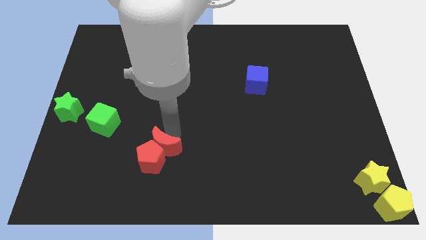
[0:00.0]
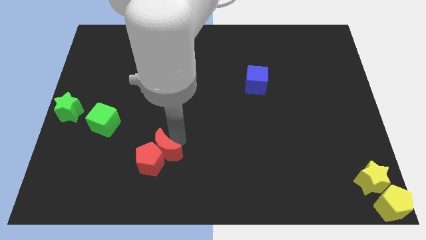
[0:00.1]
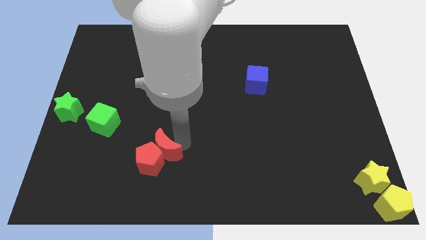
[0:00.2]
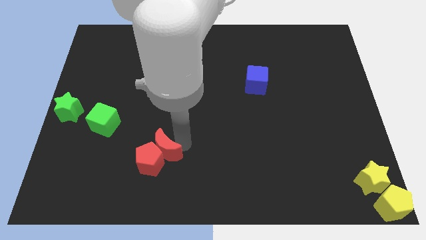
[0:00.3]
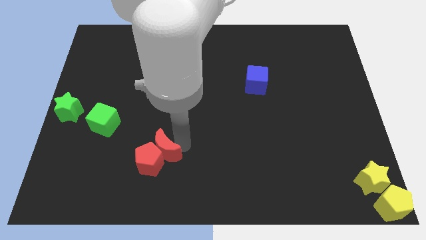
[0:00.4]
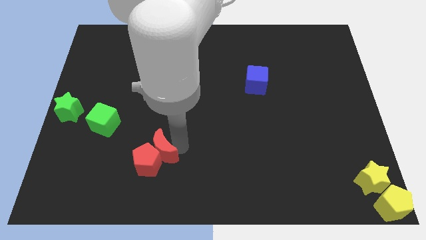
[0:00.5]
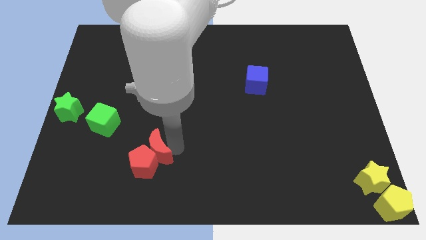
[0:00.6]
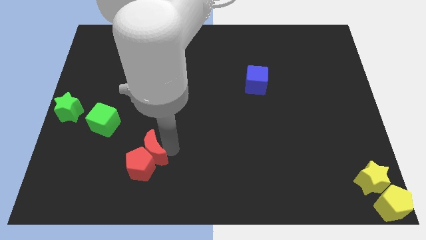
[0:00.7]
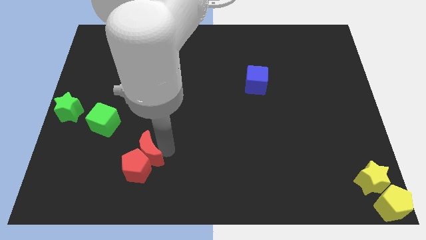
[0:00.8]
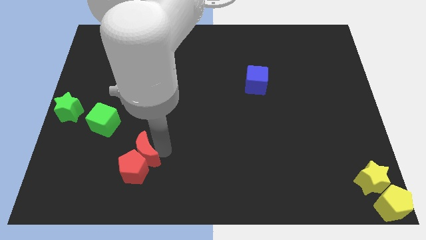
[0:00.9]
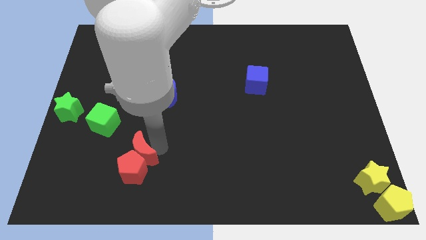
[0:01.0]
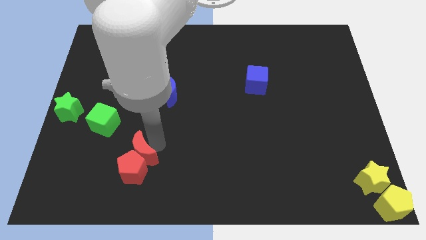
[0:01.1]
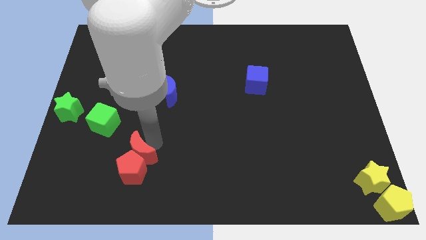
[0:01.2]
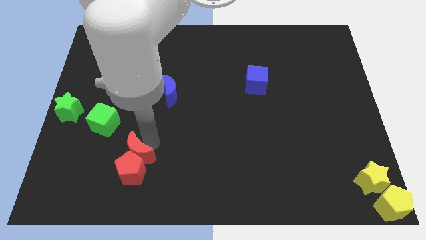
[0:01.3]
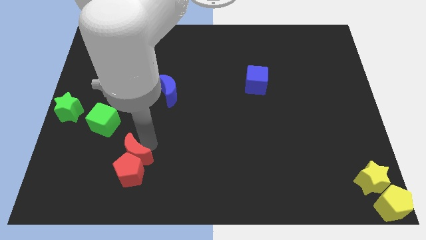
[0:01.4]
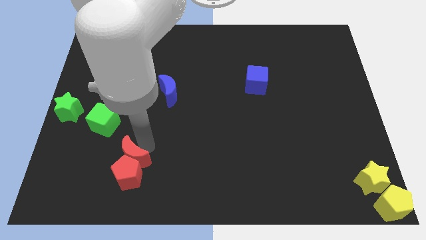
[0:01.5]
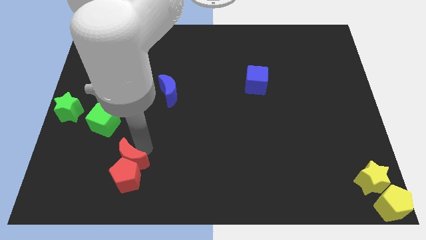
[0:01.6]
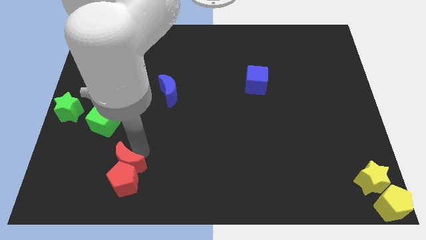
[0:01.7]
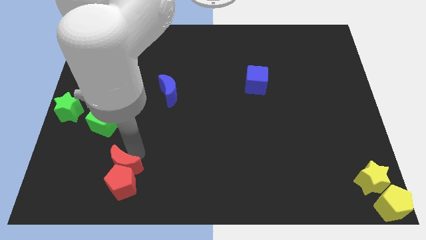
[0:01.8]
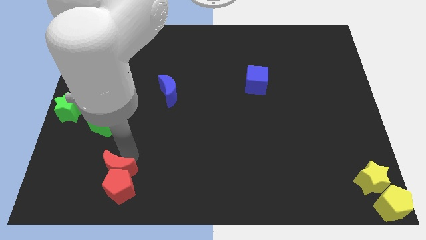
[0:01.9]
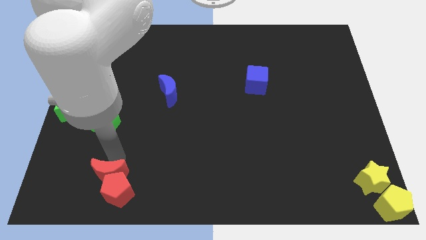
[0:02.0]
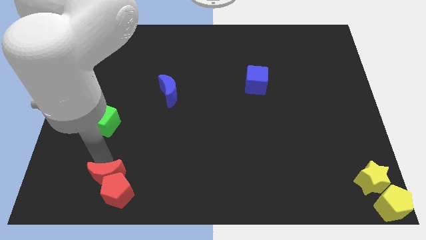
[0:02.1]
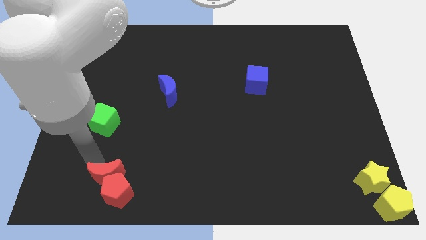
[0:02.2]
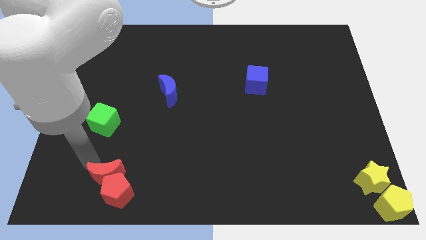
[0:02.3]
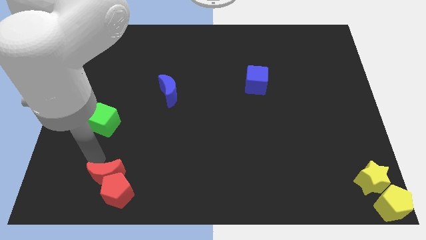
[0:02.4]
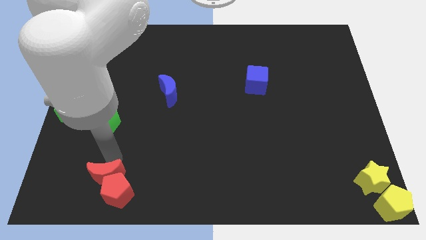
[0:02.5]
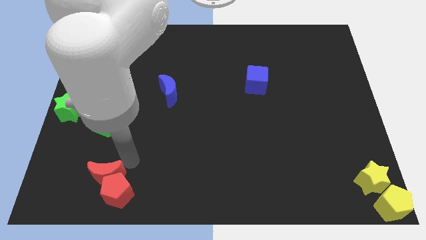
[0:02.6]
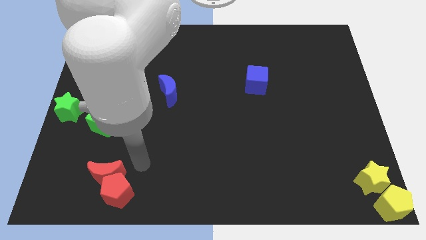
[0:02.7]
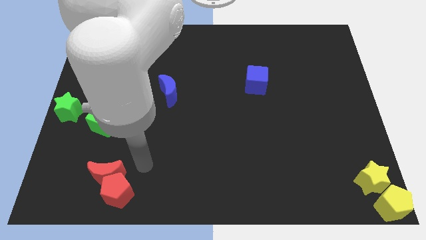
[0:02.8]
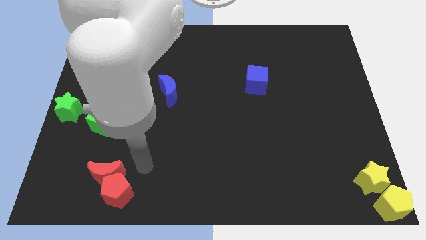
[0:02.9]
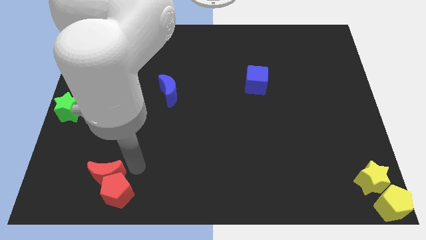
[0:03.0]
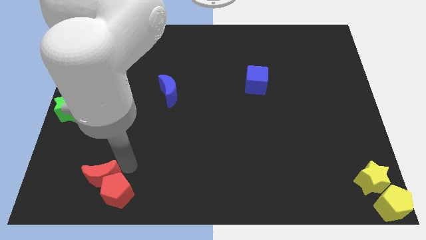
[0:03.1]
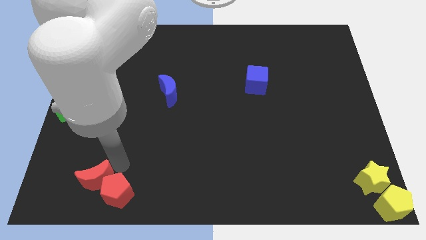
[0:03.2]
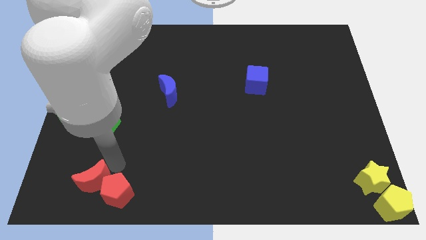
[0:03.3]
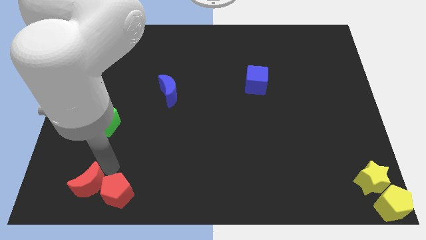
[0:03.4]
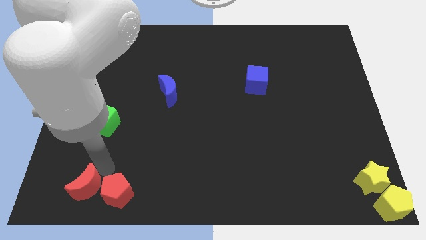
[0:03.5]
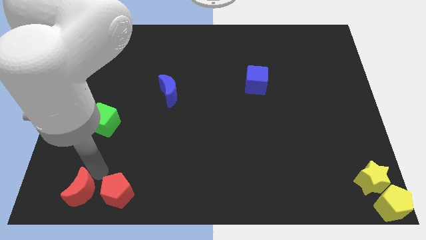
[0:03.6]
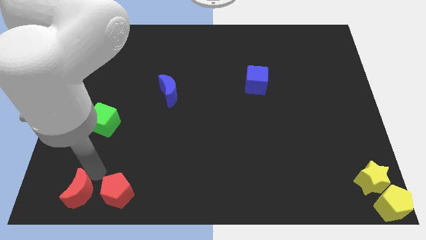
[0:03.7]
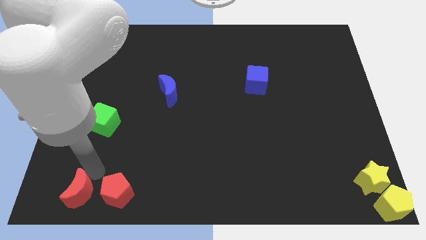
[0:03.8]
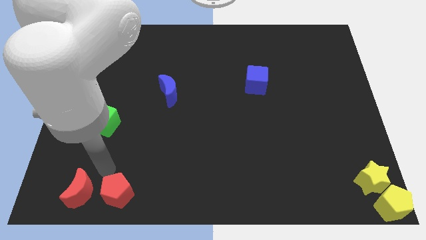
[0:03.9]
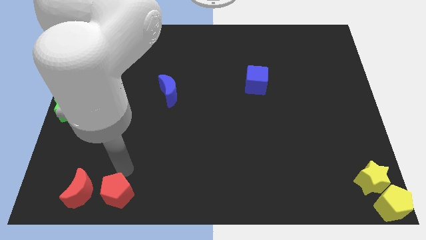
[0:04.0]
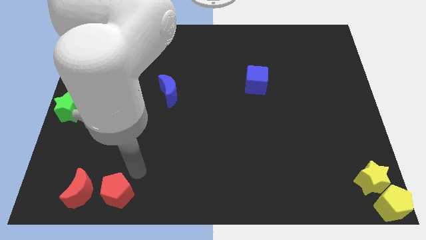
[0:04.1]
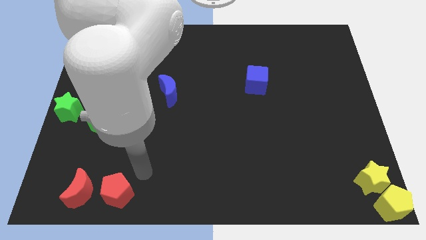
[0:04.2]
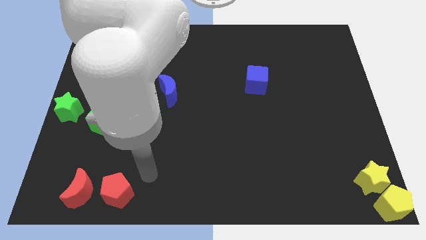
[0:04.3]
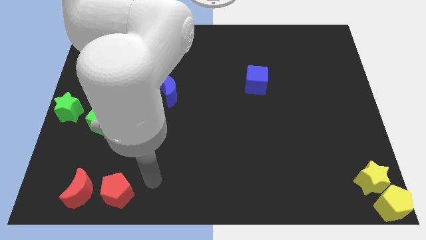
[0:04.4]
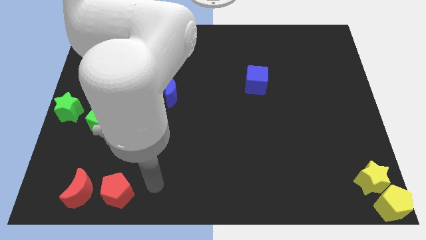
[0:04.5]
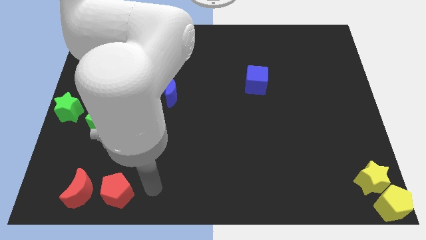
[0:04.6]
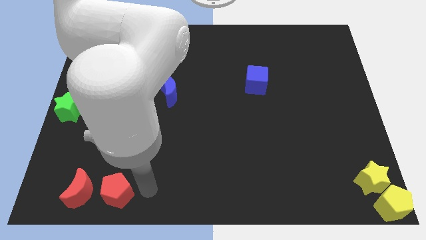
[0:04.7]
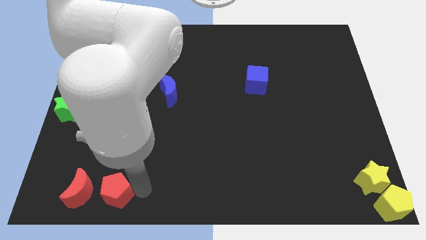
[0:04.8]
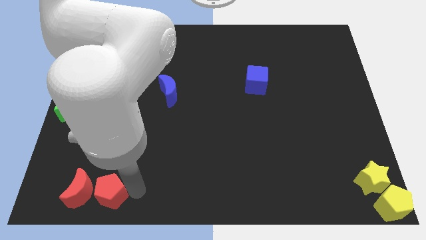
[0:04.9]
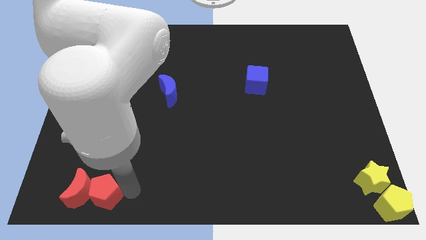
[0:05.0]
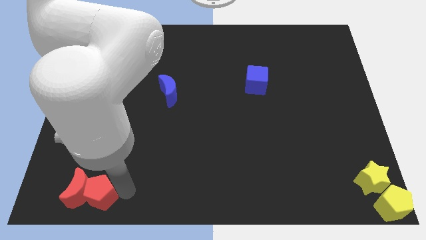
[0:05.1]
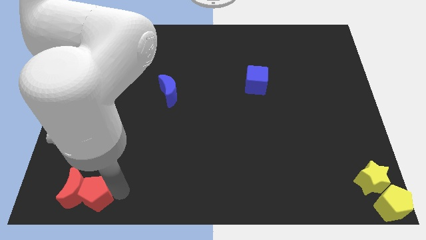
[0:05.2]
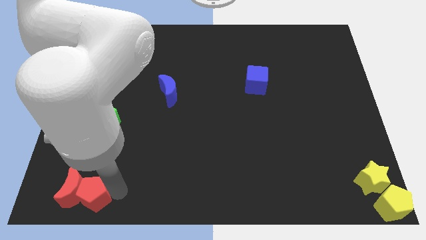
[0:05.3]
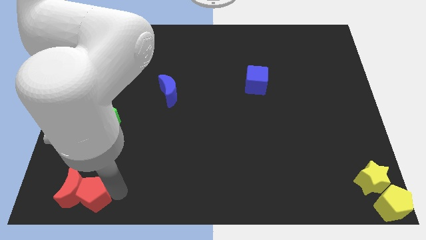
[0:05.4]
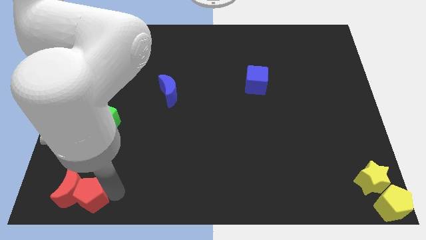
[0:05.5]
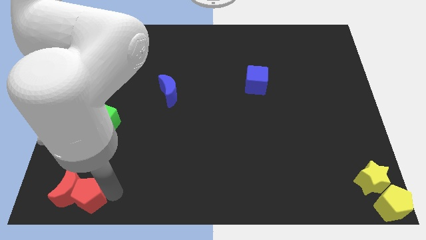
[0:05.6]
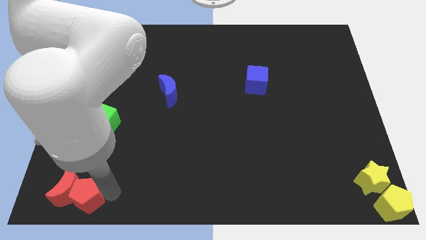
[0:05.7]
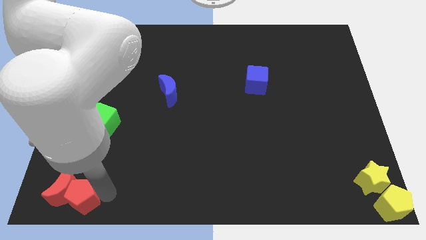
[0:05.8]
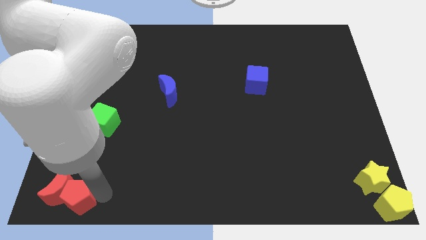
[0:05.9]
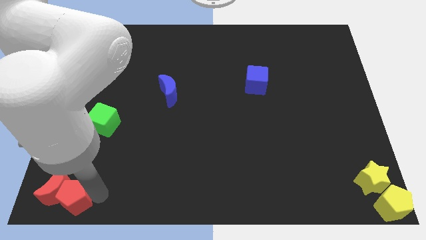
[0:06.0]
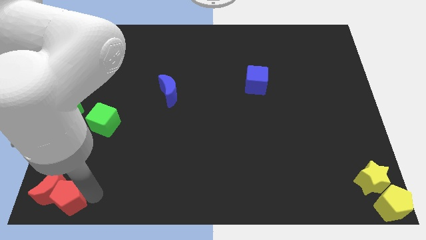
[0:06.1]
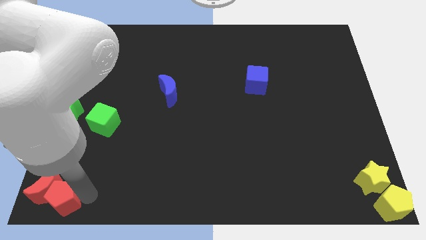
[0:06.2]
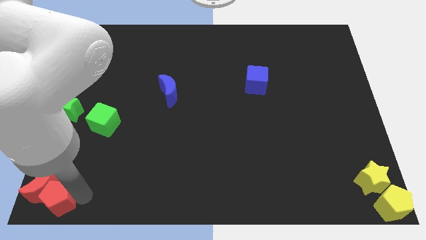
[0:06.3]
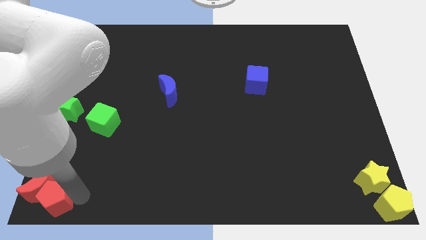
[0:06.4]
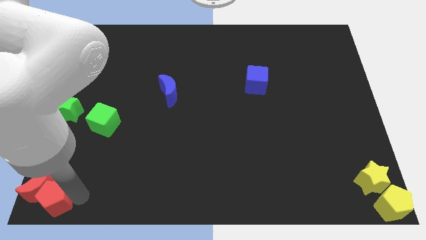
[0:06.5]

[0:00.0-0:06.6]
move the red blocks to the bottom left of the board

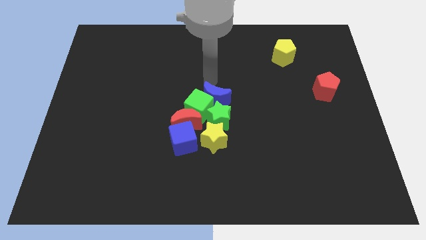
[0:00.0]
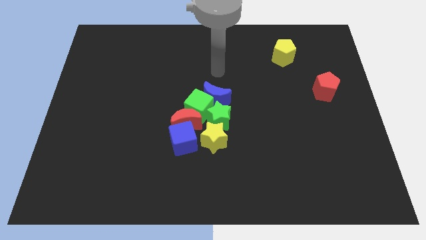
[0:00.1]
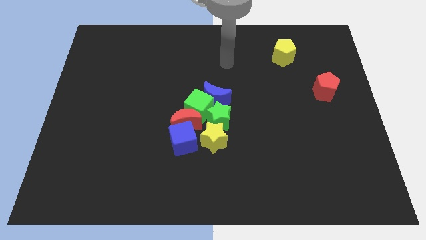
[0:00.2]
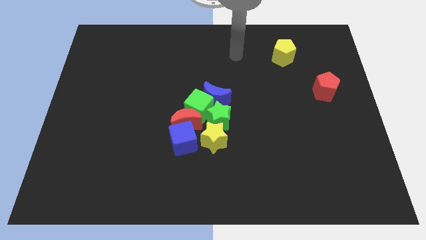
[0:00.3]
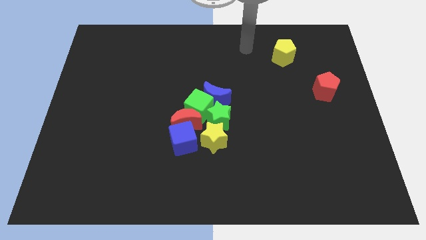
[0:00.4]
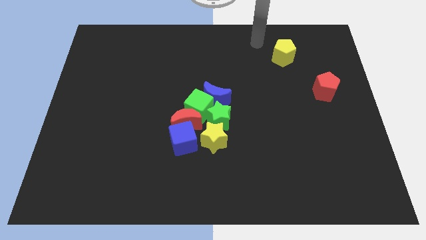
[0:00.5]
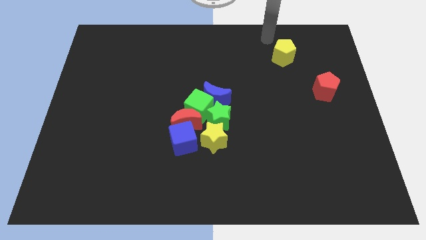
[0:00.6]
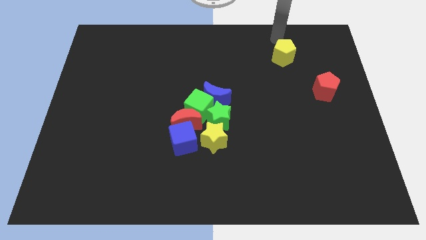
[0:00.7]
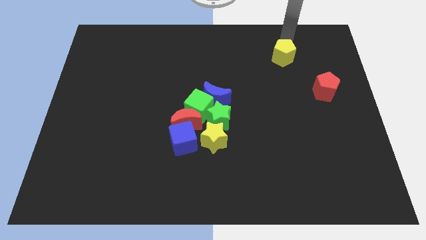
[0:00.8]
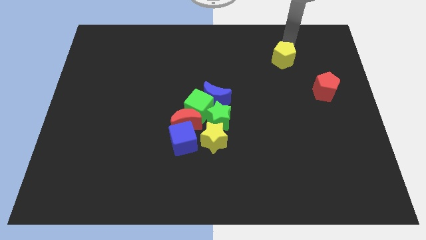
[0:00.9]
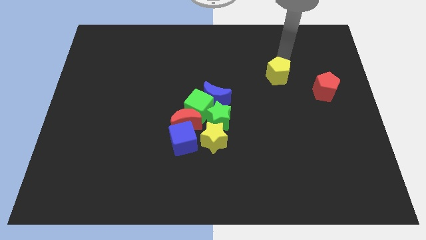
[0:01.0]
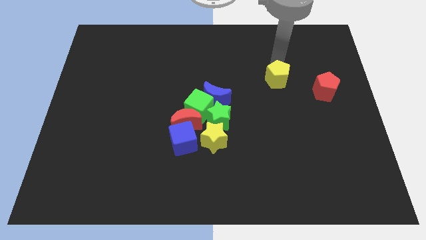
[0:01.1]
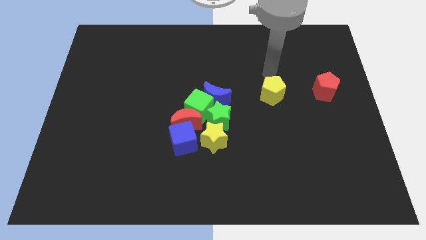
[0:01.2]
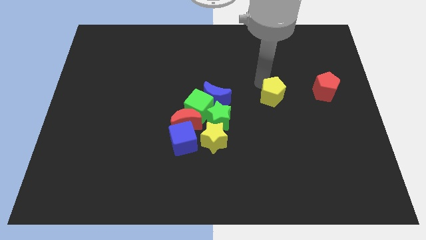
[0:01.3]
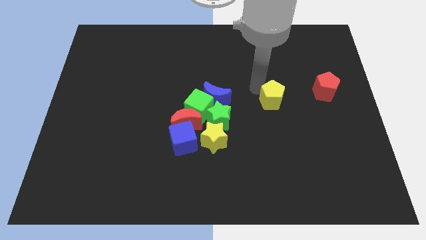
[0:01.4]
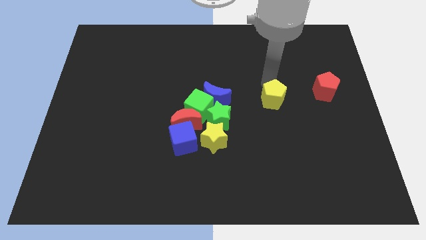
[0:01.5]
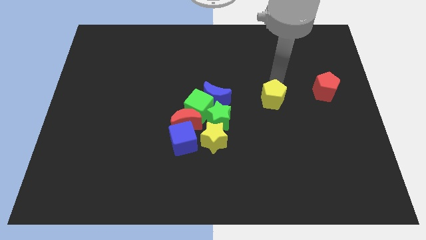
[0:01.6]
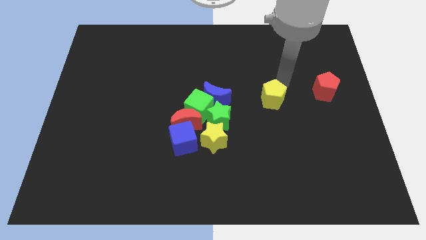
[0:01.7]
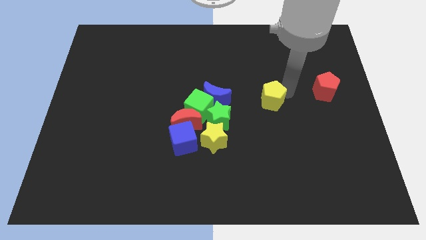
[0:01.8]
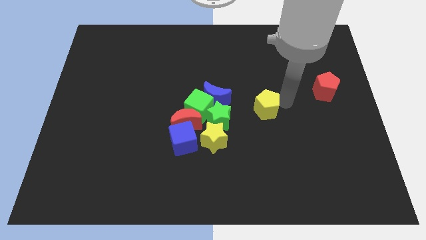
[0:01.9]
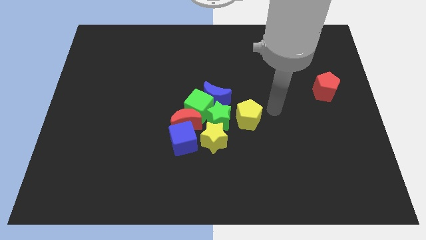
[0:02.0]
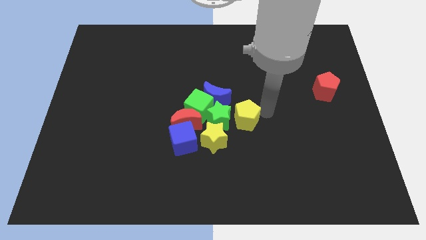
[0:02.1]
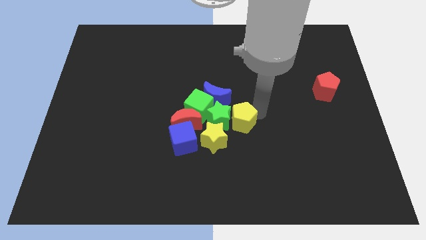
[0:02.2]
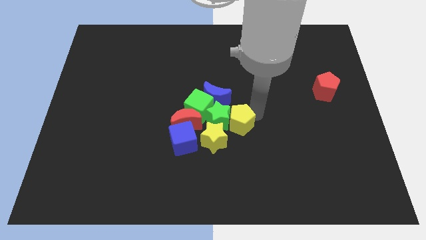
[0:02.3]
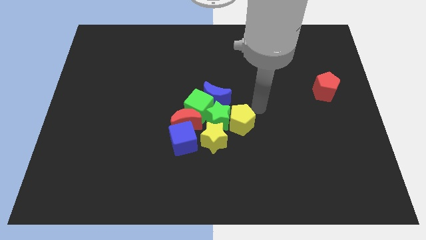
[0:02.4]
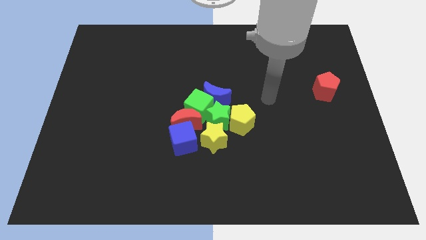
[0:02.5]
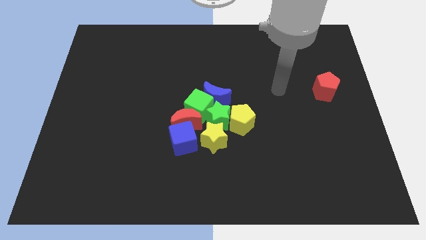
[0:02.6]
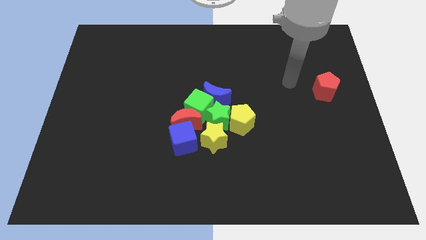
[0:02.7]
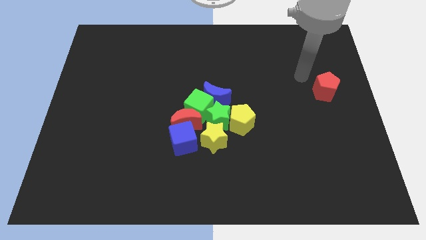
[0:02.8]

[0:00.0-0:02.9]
push yellow pentagon right to the yellow star
